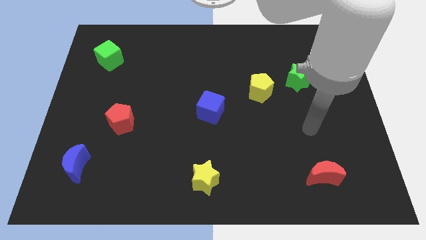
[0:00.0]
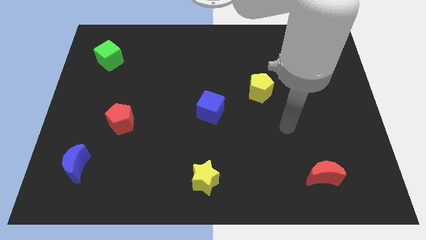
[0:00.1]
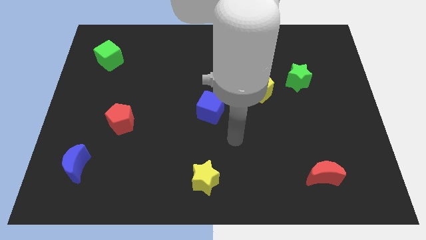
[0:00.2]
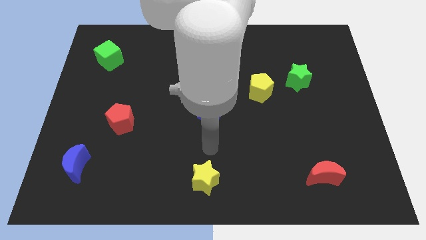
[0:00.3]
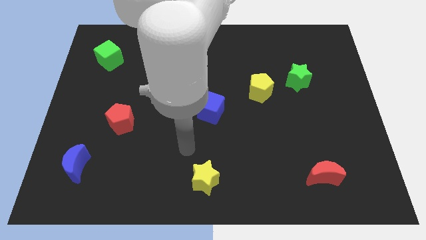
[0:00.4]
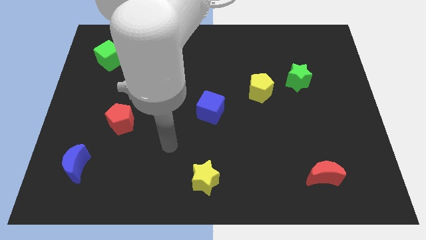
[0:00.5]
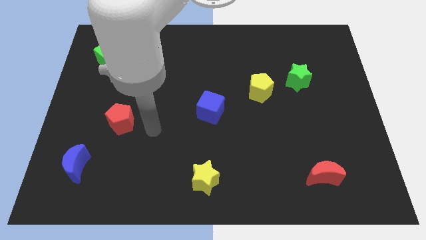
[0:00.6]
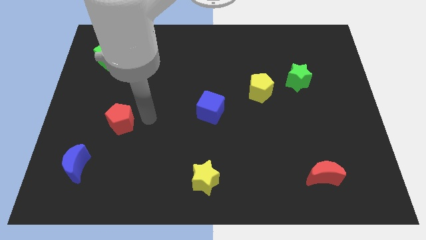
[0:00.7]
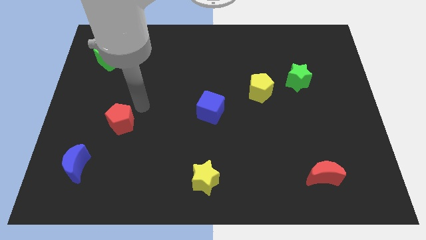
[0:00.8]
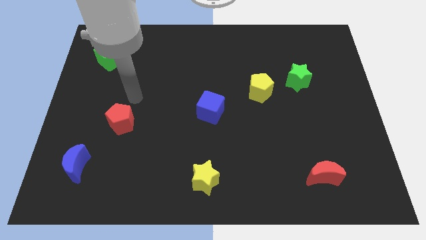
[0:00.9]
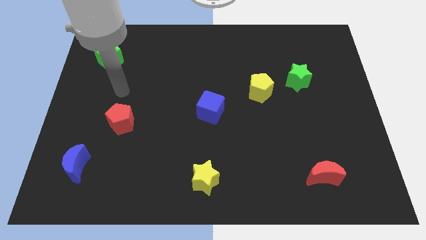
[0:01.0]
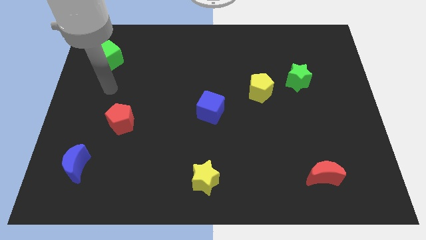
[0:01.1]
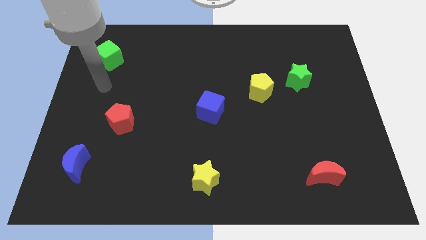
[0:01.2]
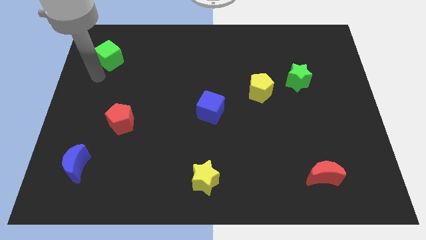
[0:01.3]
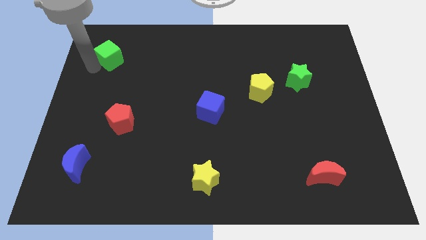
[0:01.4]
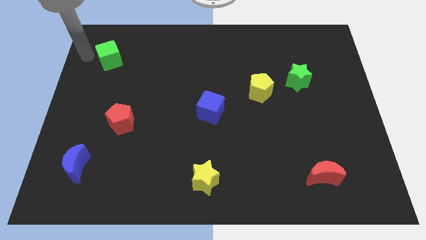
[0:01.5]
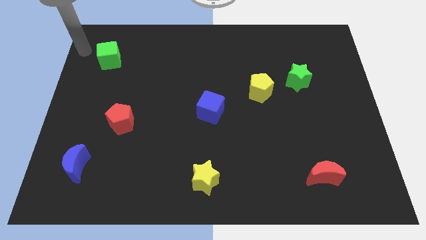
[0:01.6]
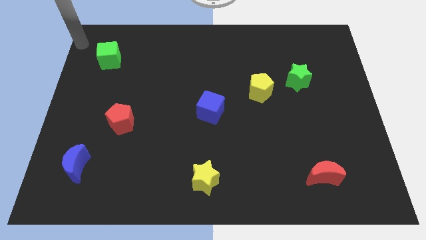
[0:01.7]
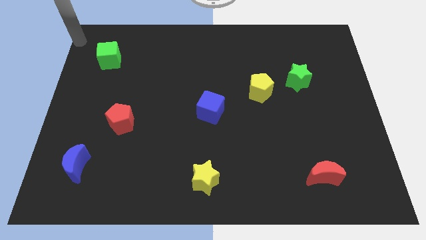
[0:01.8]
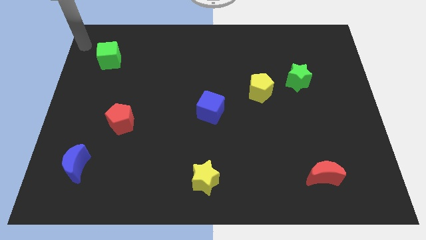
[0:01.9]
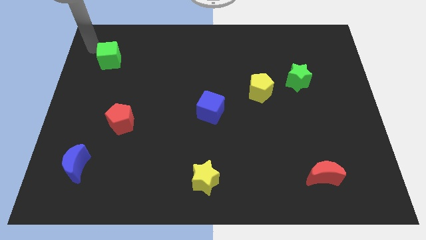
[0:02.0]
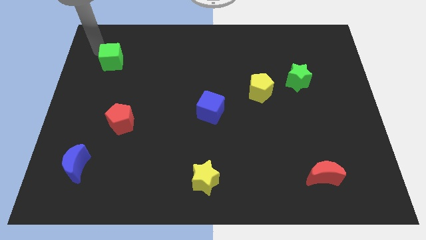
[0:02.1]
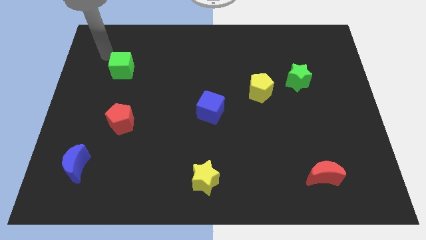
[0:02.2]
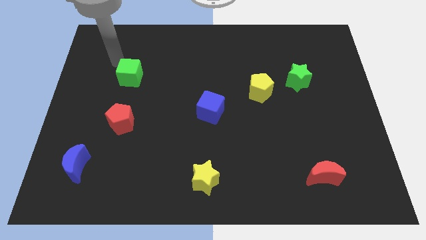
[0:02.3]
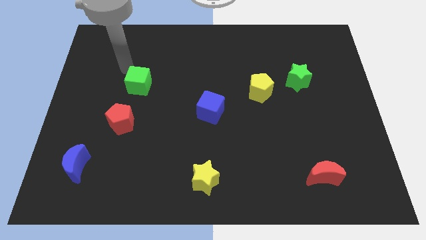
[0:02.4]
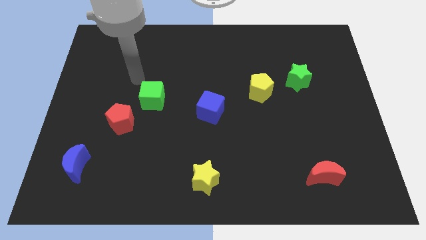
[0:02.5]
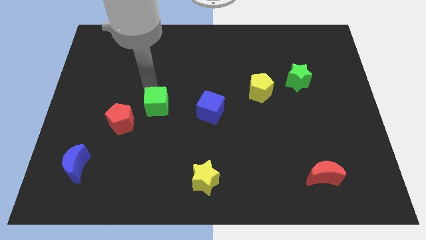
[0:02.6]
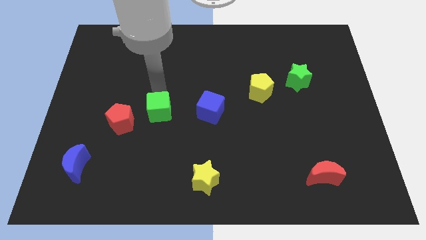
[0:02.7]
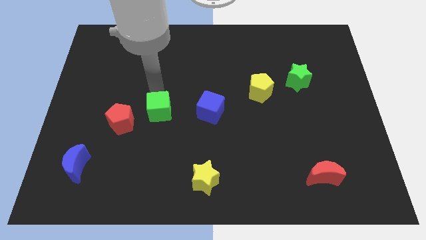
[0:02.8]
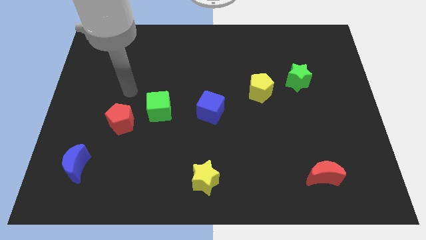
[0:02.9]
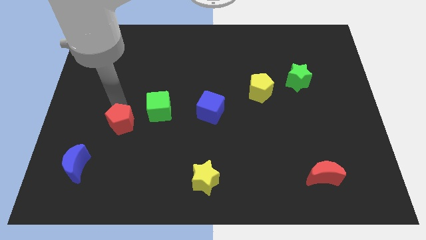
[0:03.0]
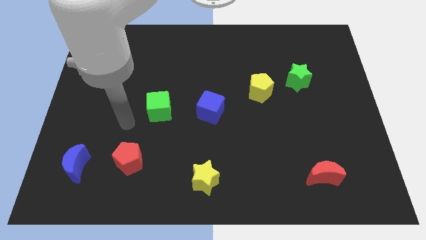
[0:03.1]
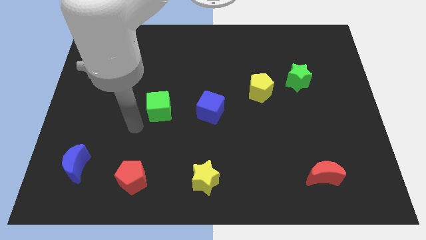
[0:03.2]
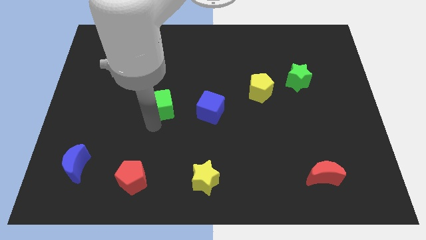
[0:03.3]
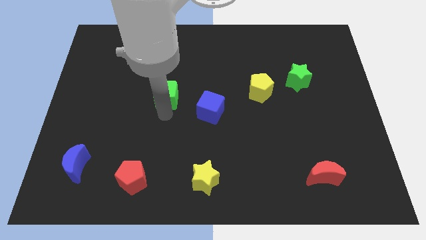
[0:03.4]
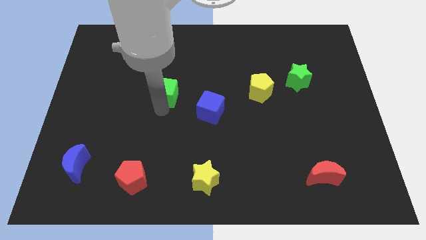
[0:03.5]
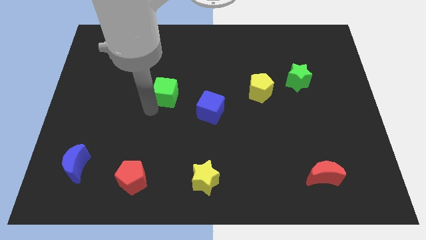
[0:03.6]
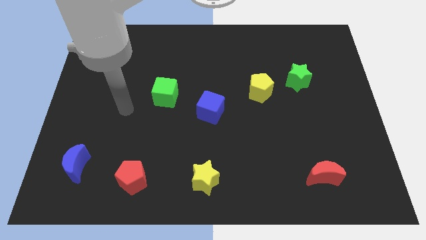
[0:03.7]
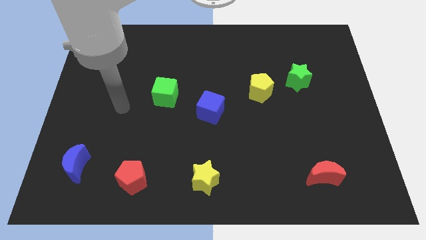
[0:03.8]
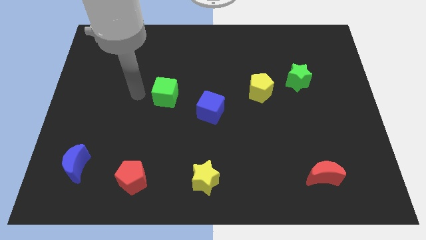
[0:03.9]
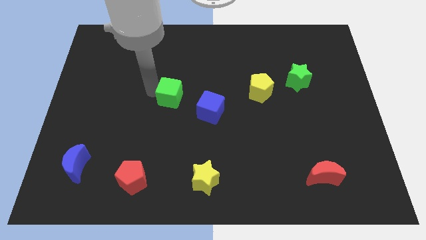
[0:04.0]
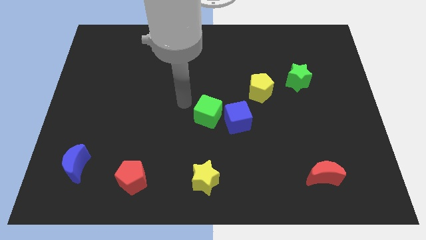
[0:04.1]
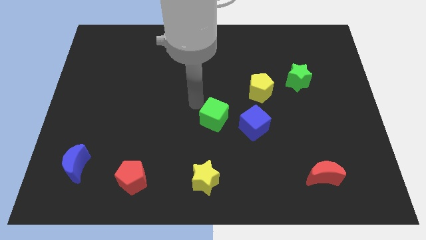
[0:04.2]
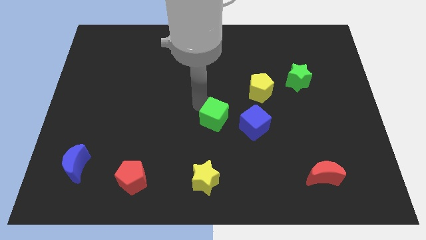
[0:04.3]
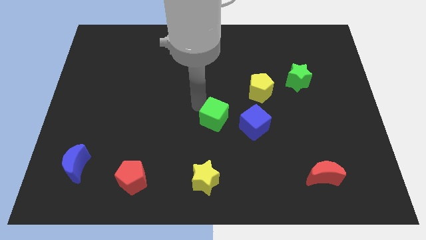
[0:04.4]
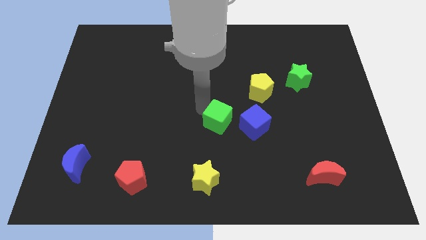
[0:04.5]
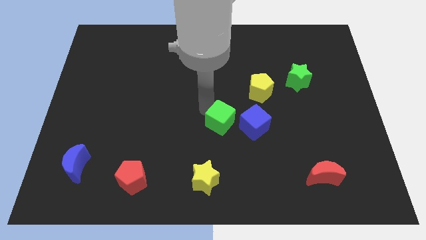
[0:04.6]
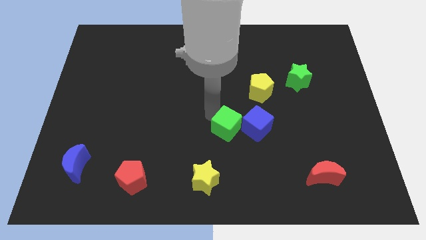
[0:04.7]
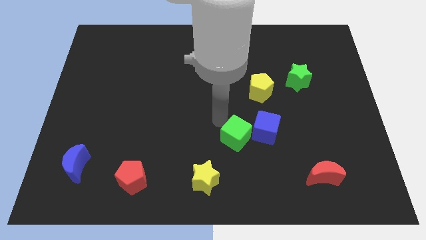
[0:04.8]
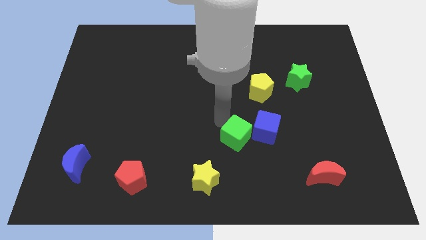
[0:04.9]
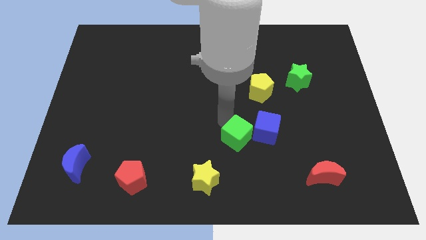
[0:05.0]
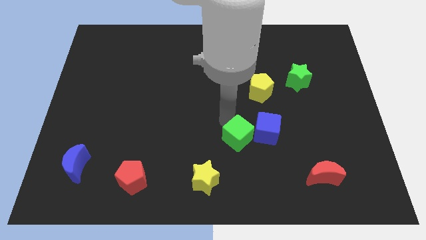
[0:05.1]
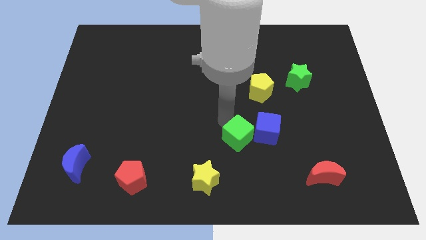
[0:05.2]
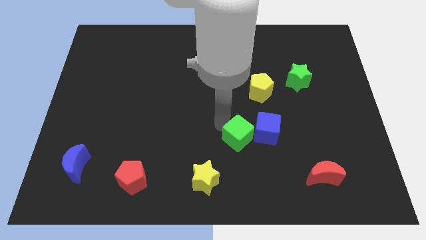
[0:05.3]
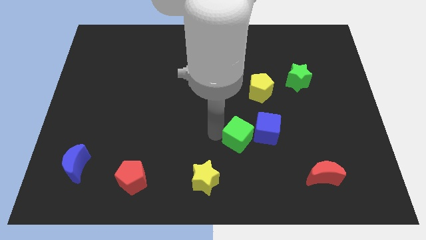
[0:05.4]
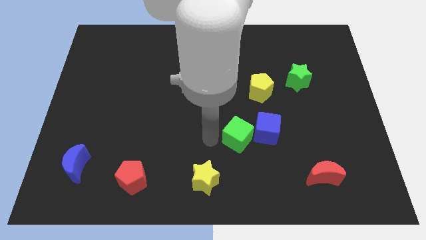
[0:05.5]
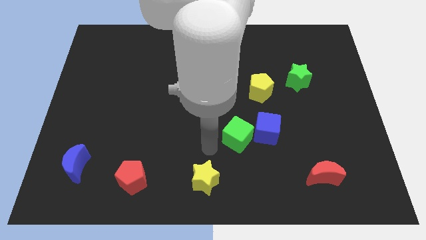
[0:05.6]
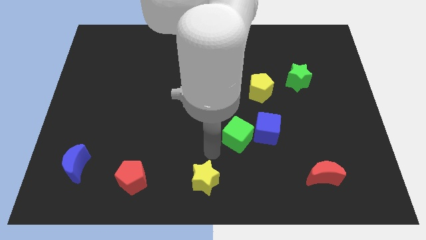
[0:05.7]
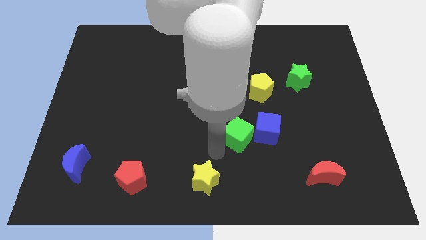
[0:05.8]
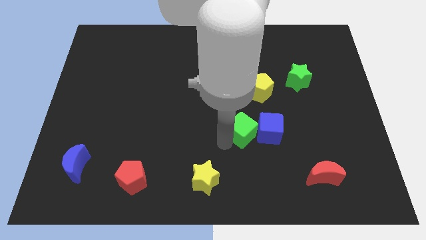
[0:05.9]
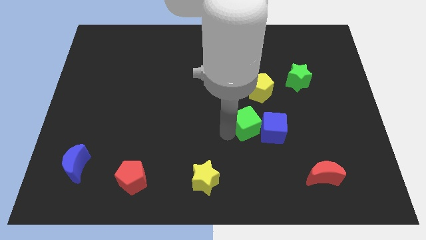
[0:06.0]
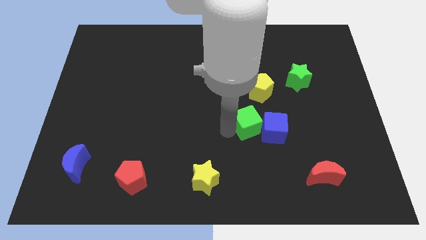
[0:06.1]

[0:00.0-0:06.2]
put the green cube next to the blue cube

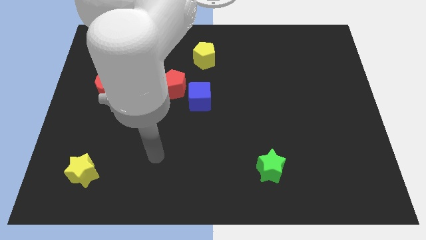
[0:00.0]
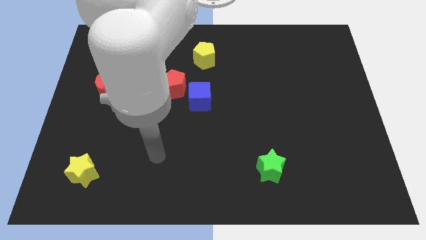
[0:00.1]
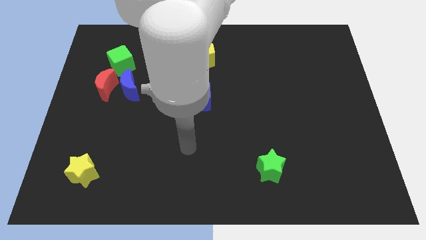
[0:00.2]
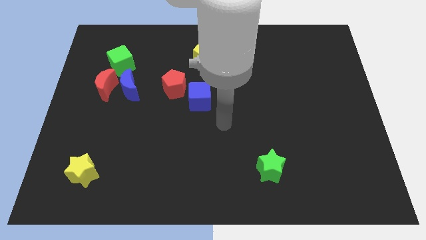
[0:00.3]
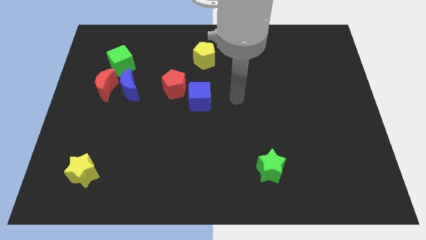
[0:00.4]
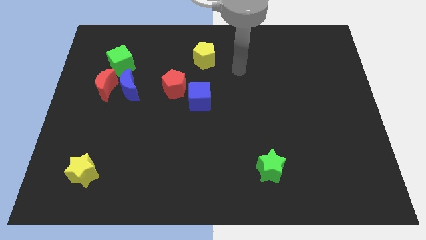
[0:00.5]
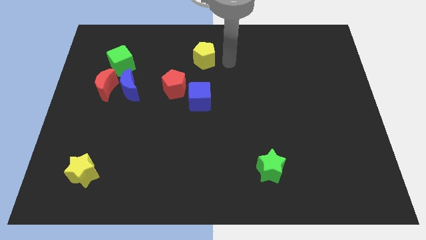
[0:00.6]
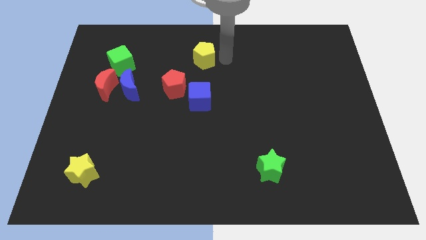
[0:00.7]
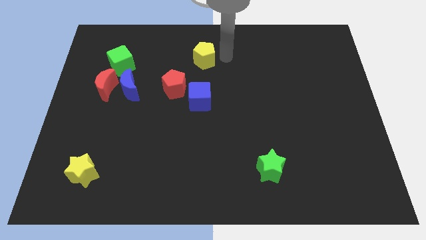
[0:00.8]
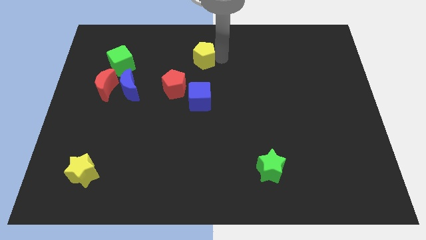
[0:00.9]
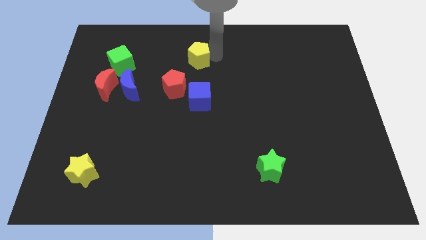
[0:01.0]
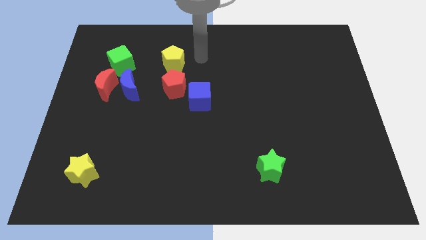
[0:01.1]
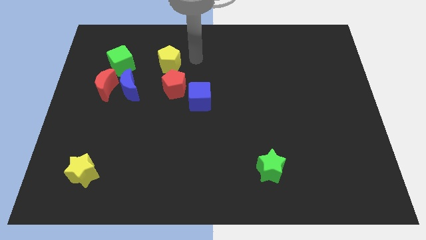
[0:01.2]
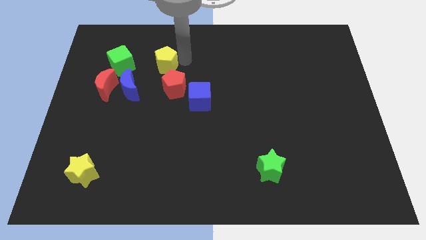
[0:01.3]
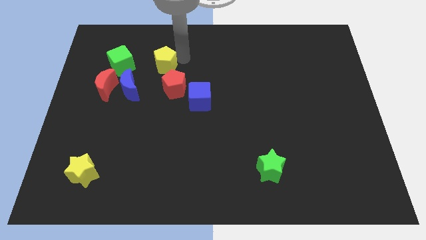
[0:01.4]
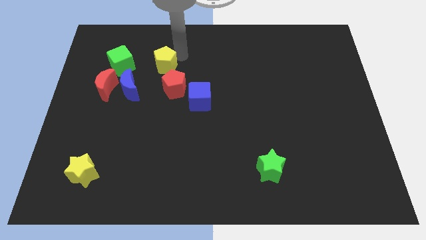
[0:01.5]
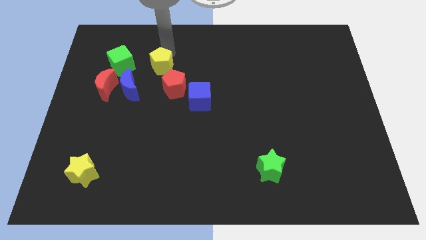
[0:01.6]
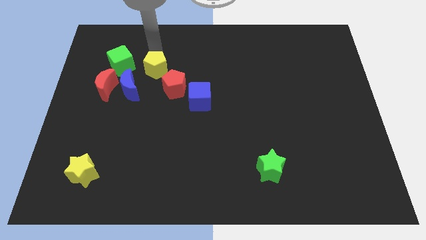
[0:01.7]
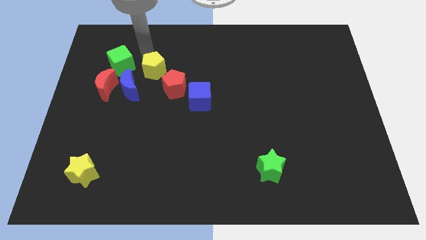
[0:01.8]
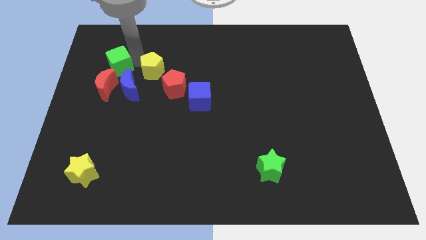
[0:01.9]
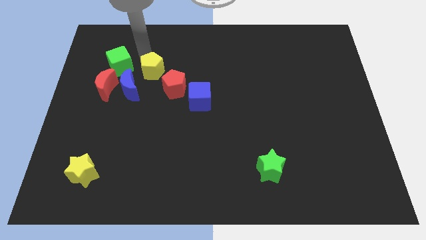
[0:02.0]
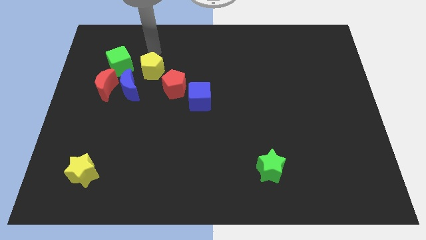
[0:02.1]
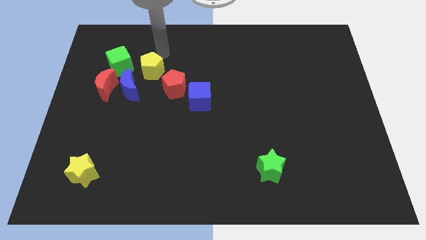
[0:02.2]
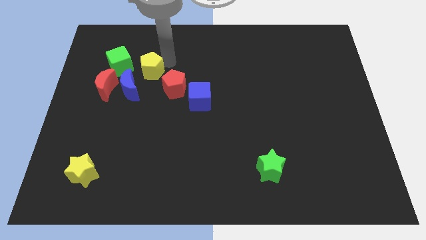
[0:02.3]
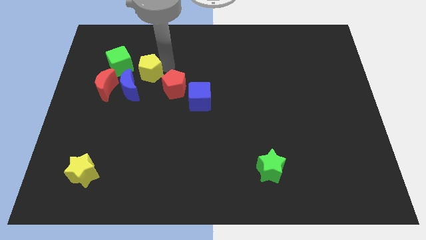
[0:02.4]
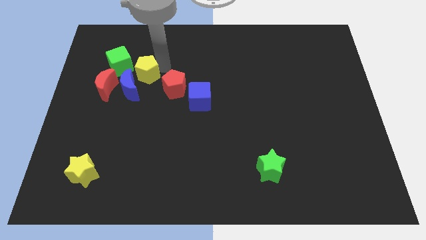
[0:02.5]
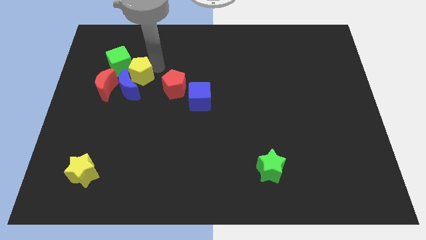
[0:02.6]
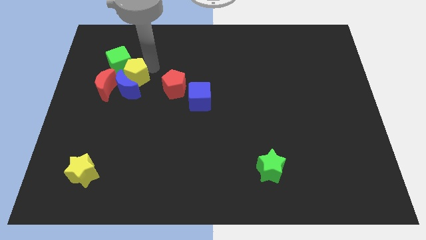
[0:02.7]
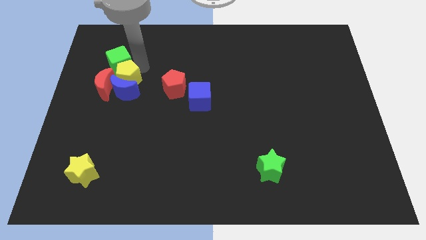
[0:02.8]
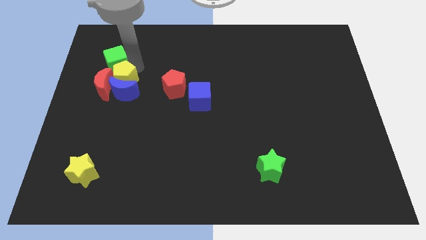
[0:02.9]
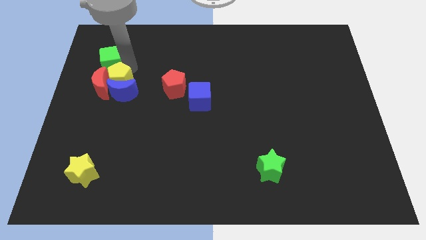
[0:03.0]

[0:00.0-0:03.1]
move the yellow pentagon next to the red moon
